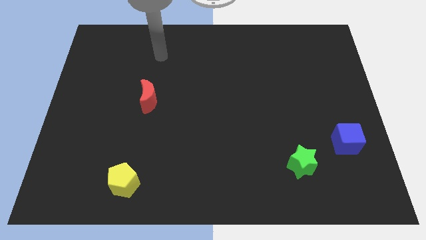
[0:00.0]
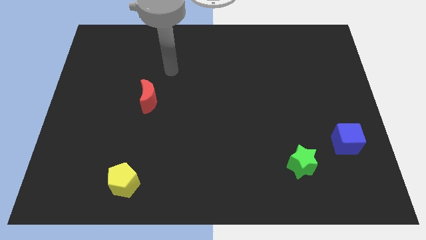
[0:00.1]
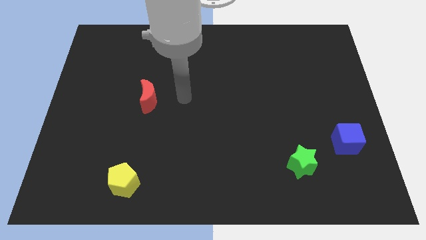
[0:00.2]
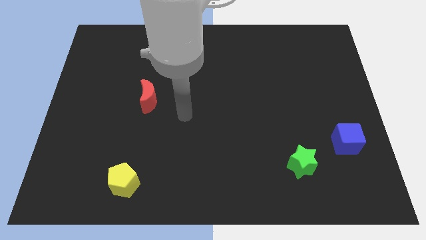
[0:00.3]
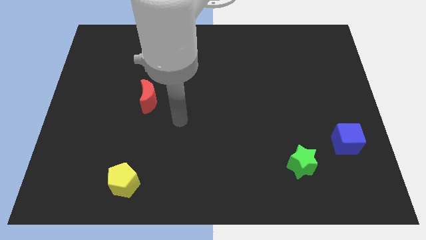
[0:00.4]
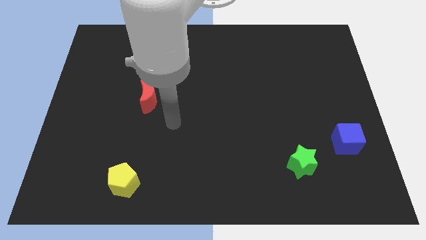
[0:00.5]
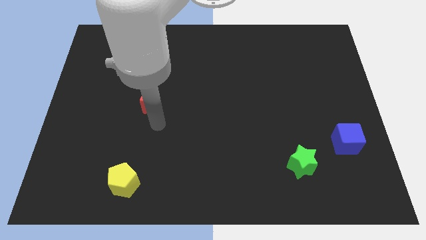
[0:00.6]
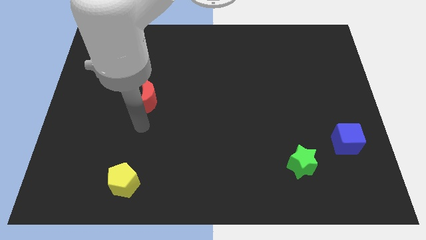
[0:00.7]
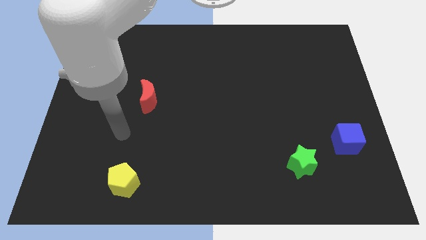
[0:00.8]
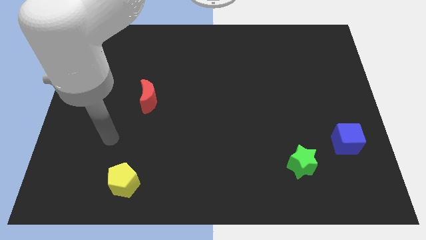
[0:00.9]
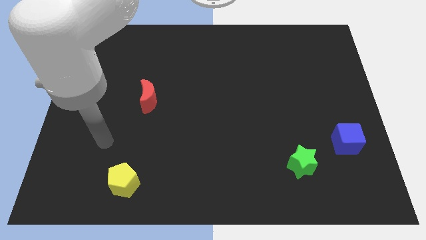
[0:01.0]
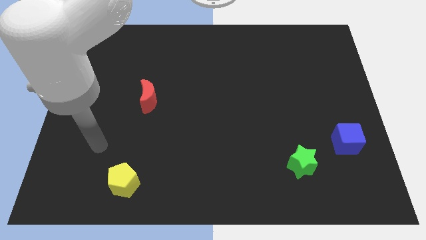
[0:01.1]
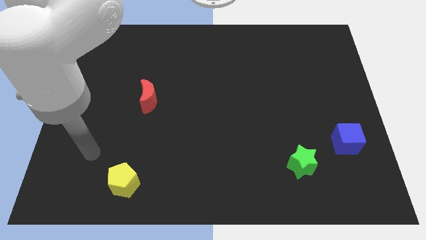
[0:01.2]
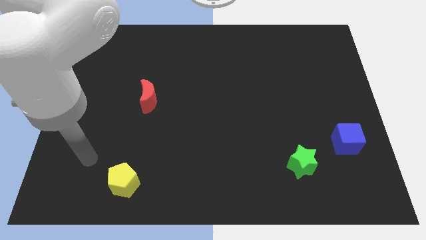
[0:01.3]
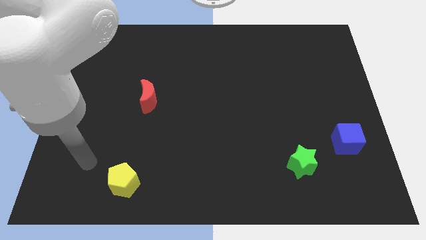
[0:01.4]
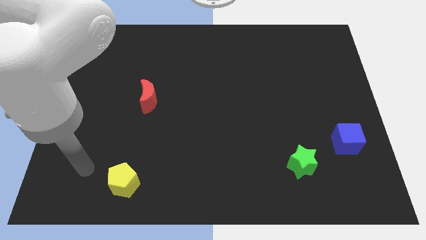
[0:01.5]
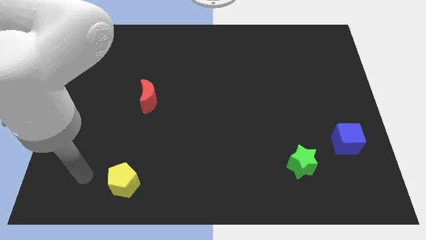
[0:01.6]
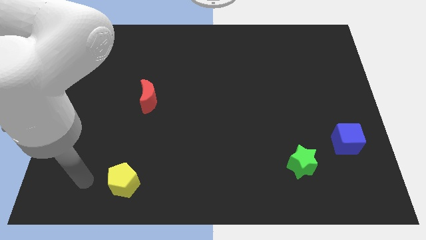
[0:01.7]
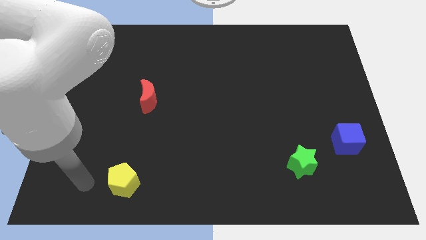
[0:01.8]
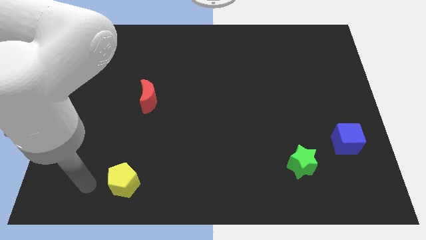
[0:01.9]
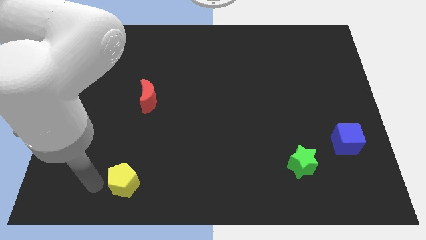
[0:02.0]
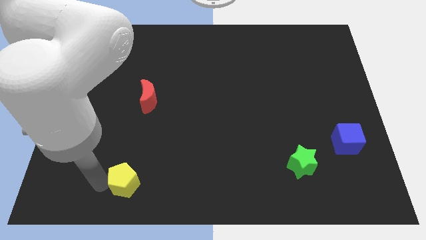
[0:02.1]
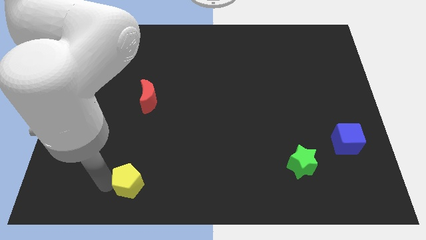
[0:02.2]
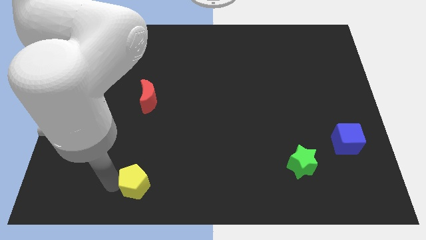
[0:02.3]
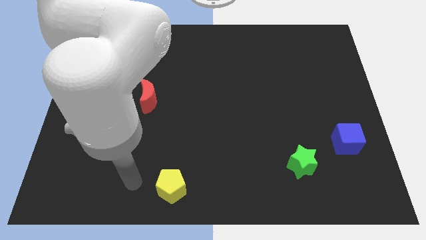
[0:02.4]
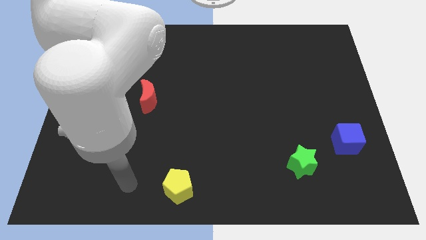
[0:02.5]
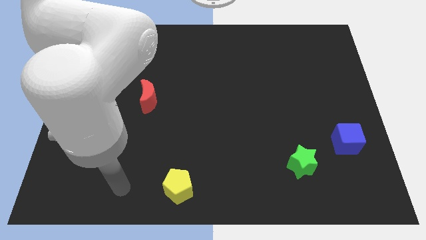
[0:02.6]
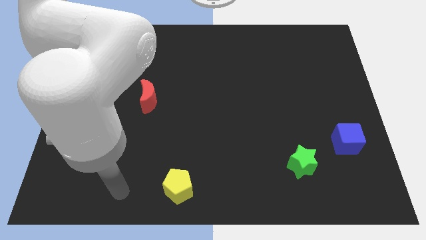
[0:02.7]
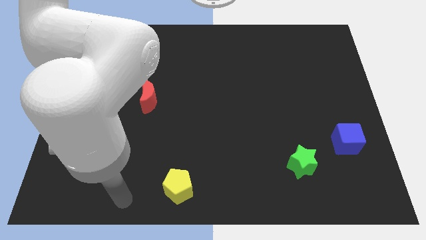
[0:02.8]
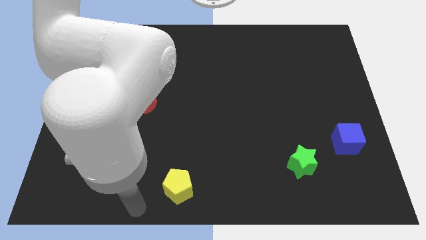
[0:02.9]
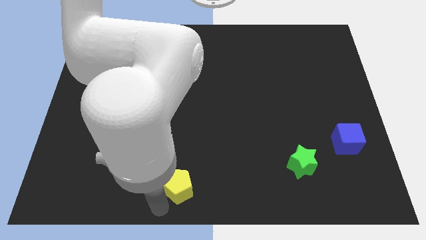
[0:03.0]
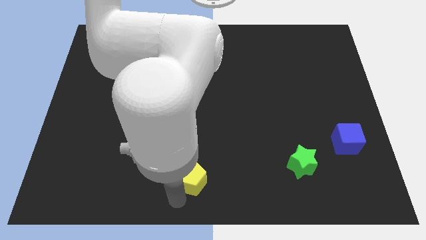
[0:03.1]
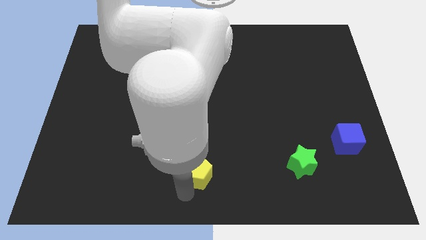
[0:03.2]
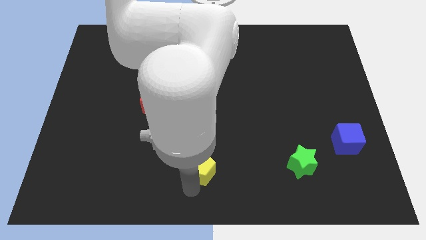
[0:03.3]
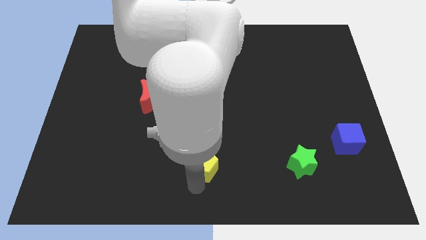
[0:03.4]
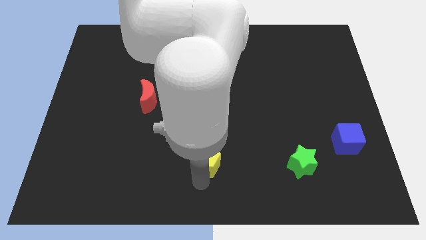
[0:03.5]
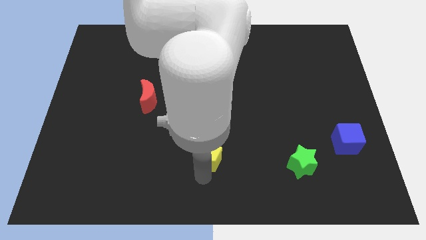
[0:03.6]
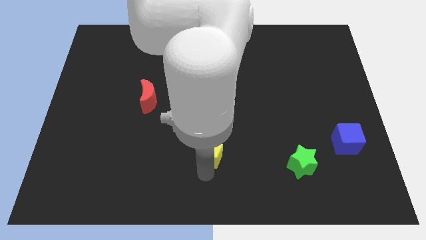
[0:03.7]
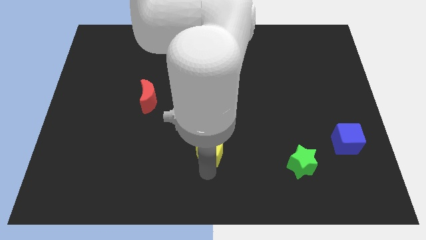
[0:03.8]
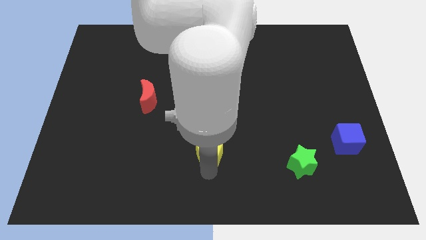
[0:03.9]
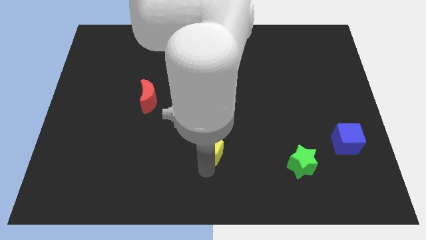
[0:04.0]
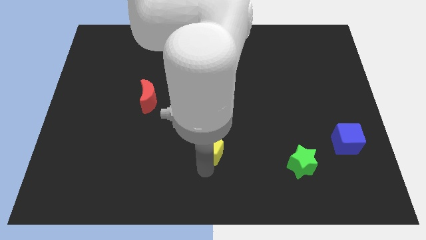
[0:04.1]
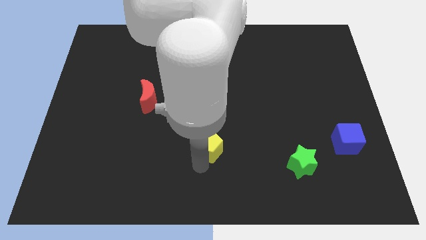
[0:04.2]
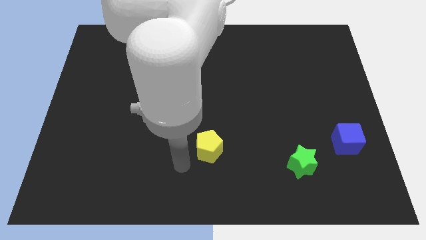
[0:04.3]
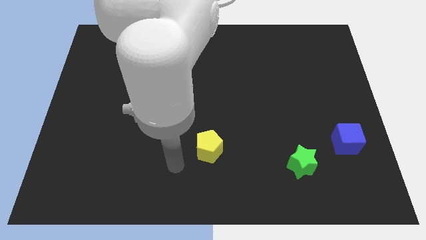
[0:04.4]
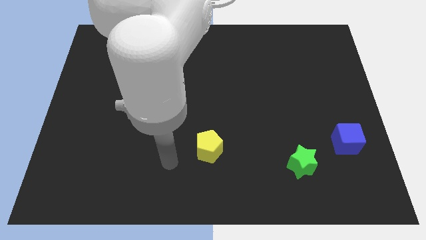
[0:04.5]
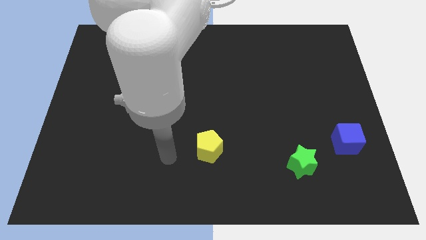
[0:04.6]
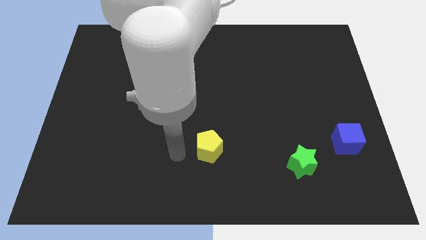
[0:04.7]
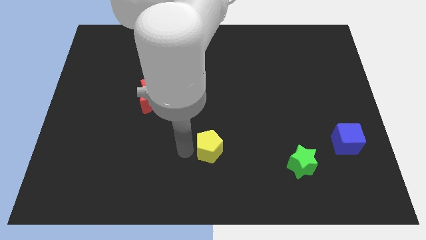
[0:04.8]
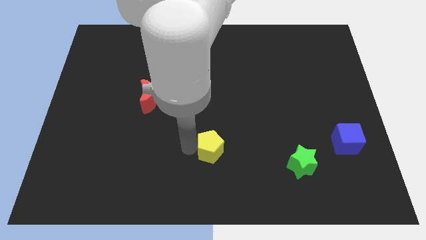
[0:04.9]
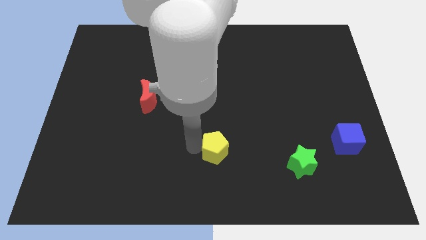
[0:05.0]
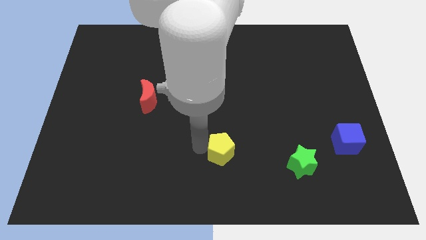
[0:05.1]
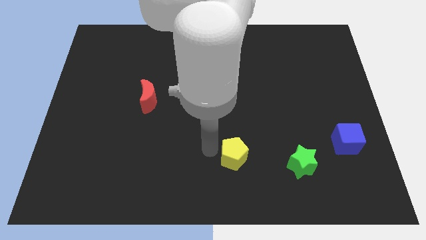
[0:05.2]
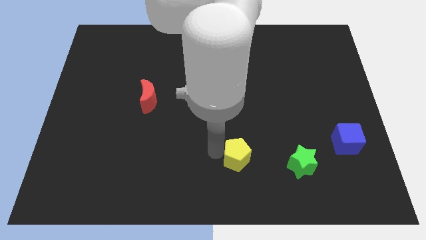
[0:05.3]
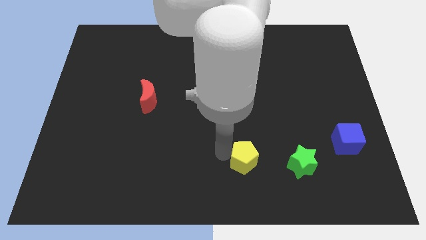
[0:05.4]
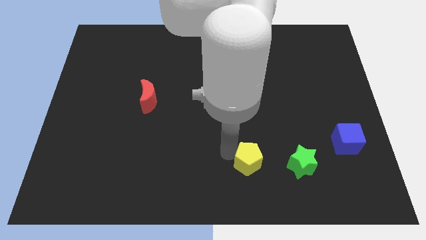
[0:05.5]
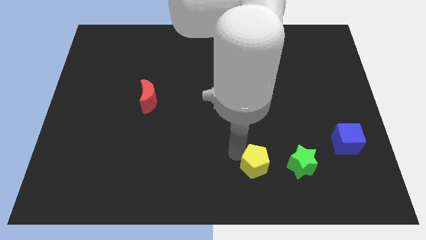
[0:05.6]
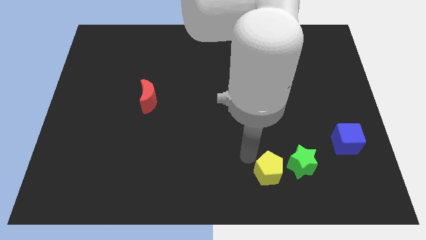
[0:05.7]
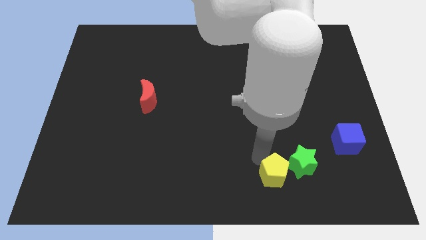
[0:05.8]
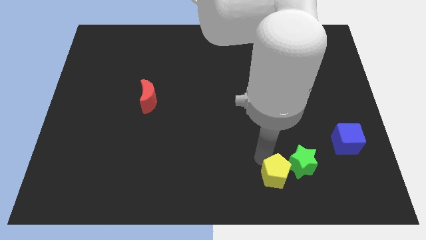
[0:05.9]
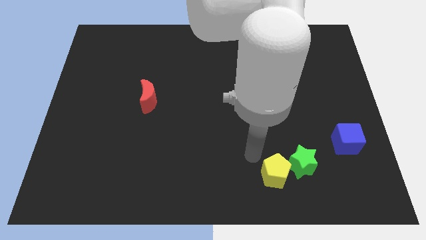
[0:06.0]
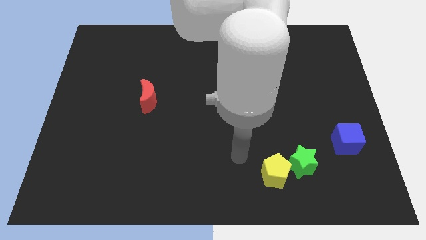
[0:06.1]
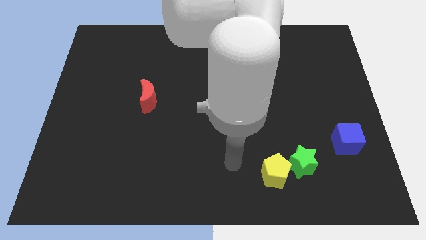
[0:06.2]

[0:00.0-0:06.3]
put the pentagon close to the green block

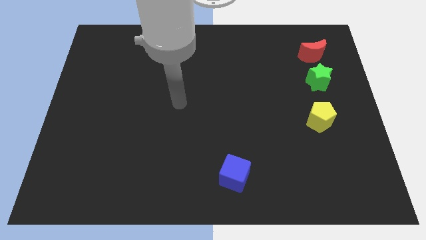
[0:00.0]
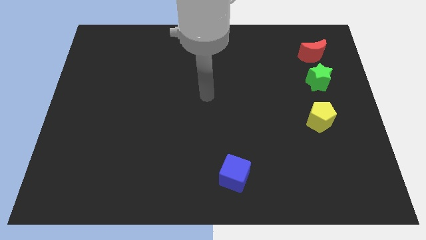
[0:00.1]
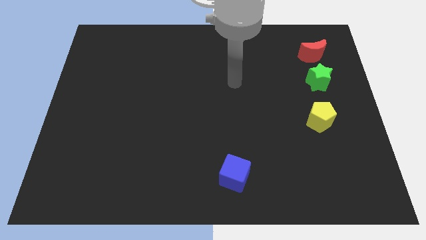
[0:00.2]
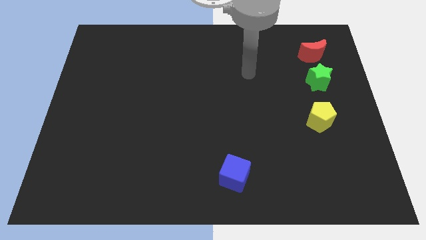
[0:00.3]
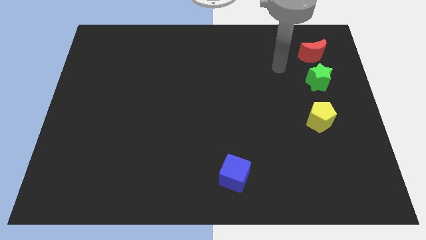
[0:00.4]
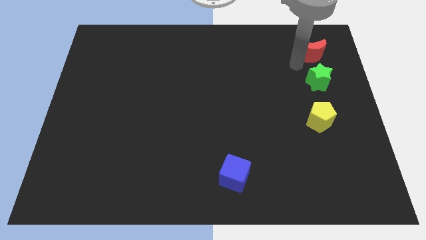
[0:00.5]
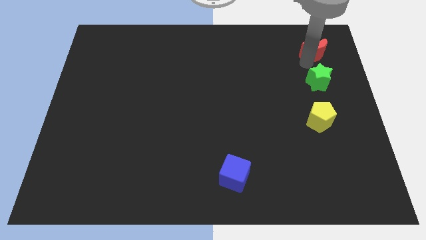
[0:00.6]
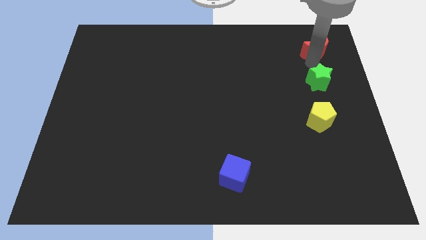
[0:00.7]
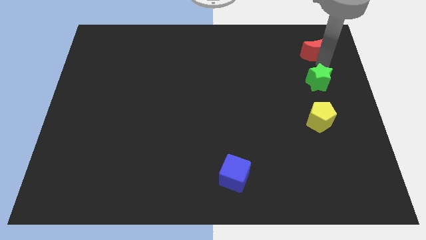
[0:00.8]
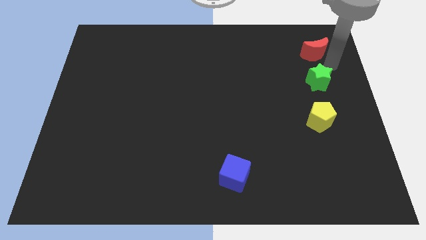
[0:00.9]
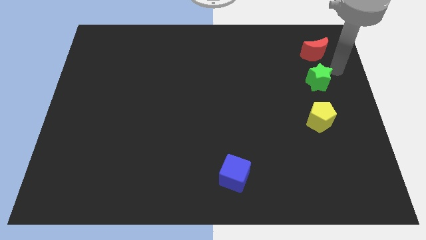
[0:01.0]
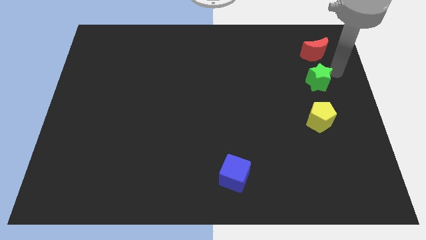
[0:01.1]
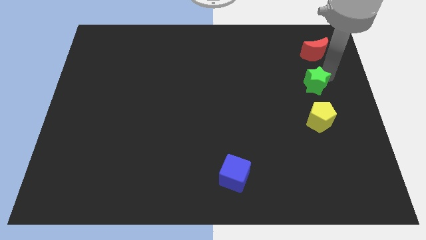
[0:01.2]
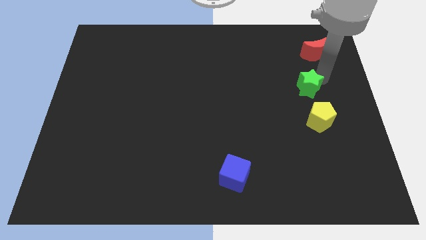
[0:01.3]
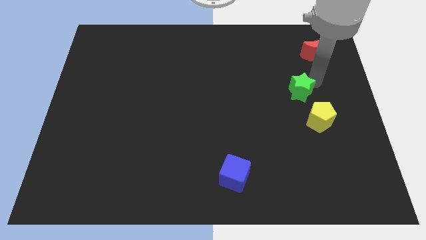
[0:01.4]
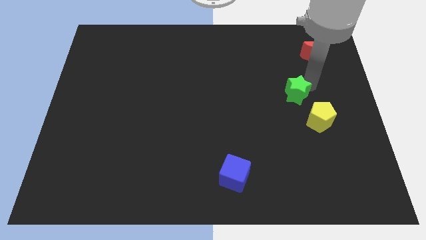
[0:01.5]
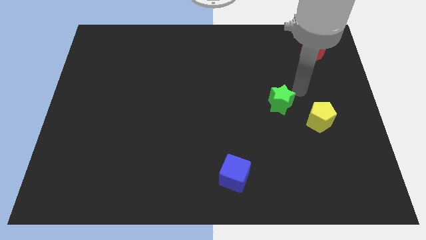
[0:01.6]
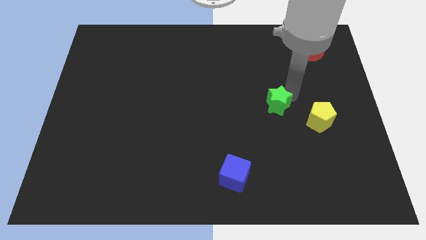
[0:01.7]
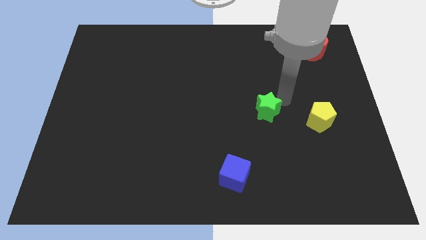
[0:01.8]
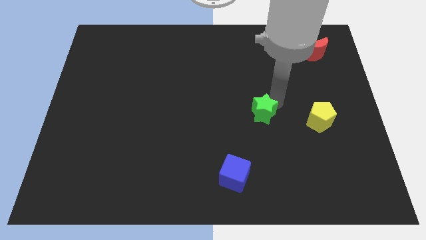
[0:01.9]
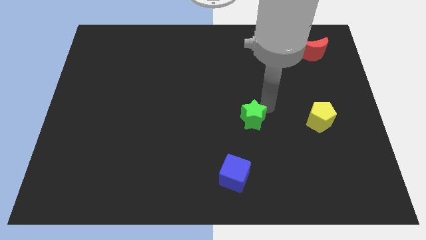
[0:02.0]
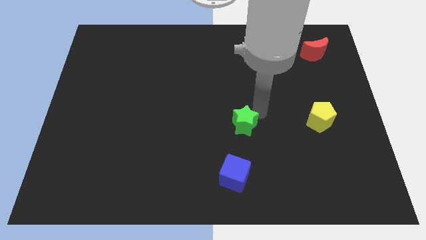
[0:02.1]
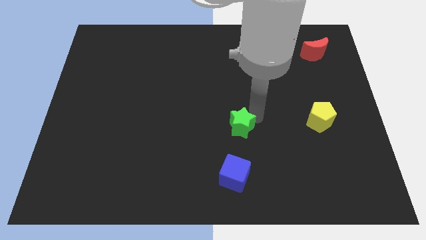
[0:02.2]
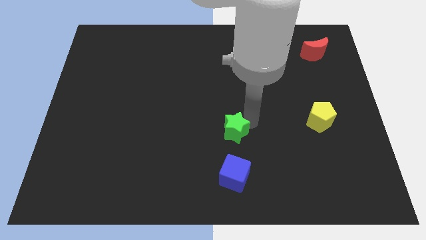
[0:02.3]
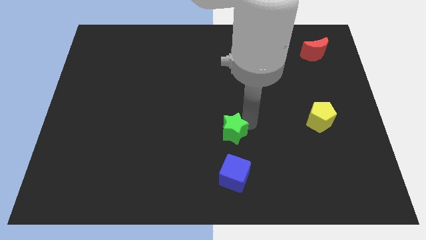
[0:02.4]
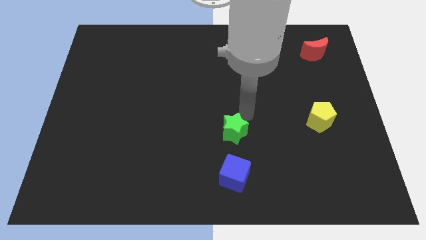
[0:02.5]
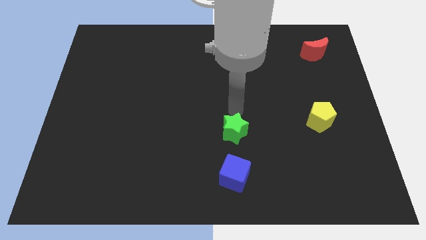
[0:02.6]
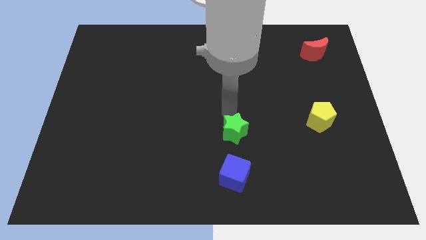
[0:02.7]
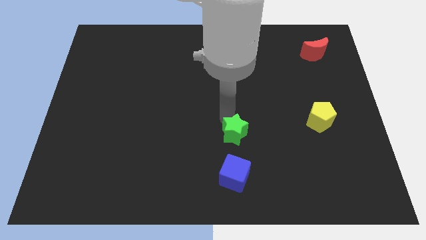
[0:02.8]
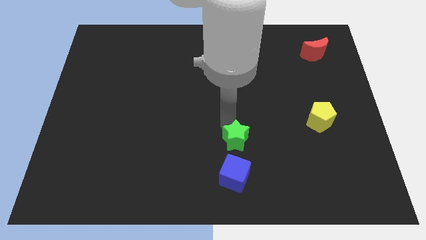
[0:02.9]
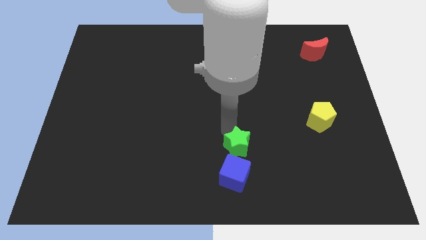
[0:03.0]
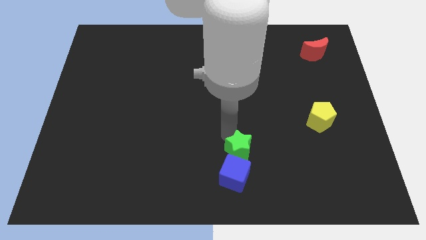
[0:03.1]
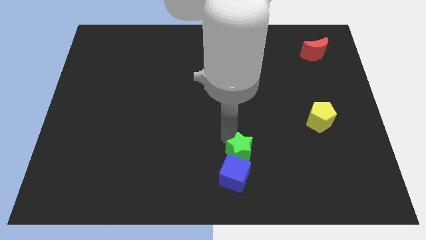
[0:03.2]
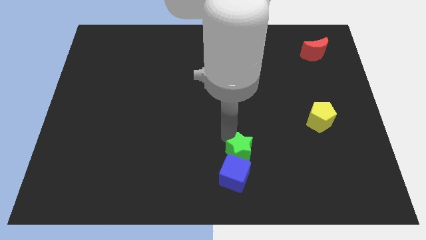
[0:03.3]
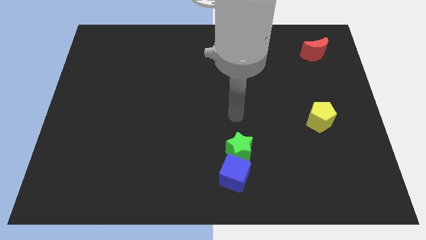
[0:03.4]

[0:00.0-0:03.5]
put the star to the cube
